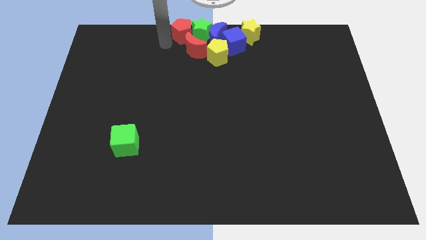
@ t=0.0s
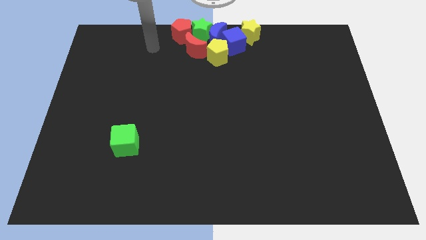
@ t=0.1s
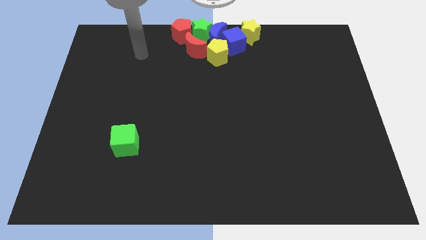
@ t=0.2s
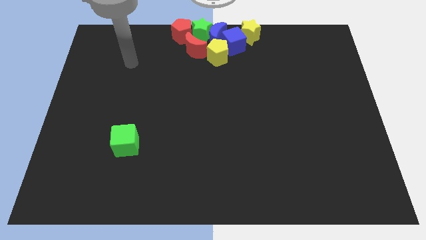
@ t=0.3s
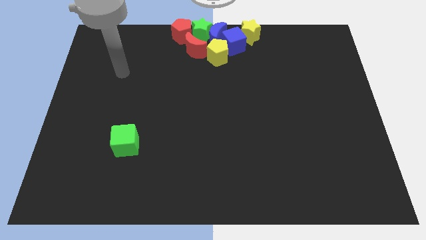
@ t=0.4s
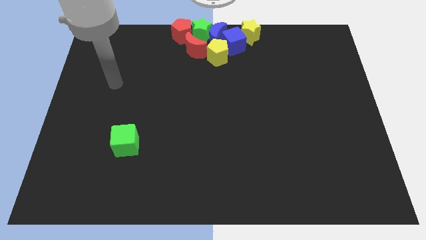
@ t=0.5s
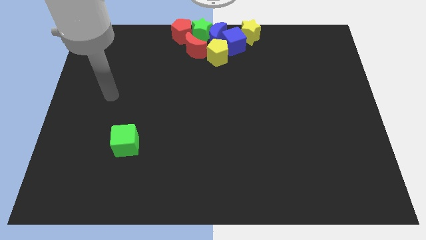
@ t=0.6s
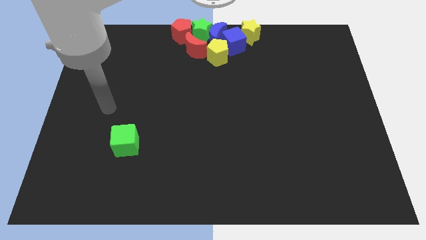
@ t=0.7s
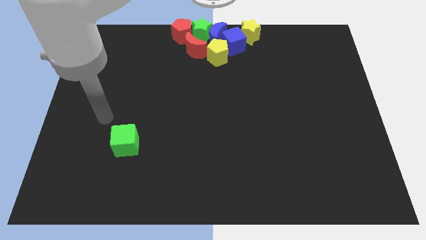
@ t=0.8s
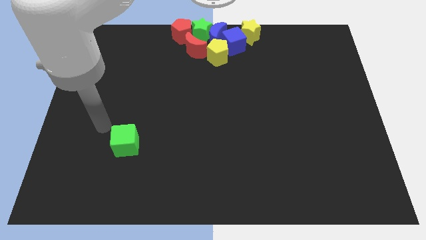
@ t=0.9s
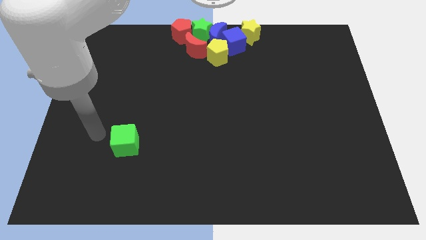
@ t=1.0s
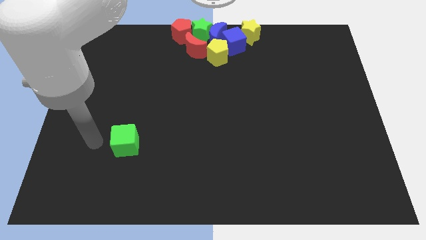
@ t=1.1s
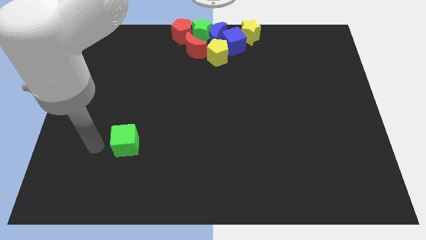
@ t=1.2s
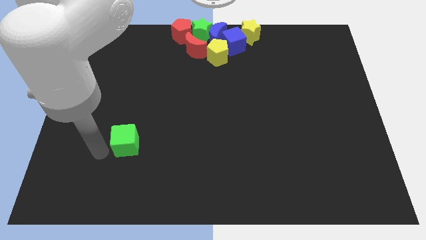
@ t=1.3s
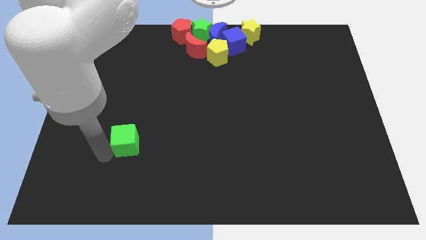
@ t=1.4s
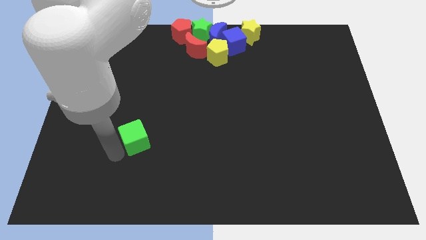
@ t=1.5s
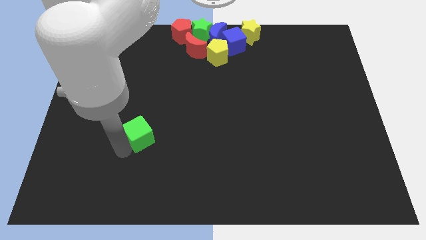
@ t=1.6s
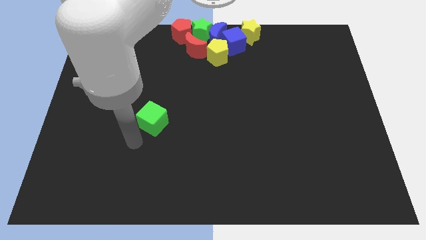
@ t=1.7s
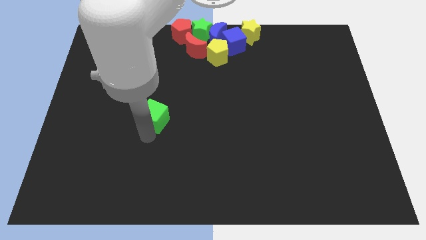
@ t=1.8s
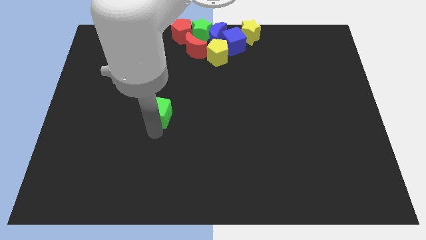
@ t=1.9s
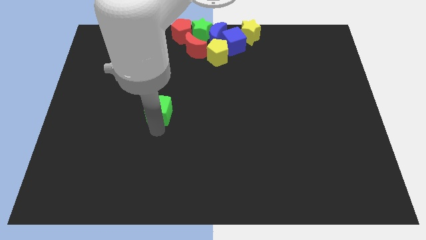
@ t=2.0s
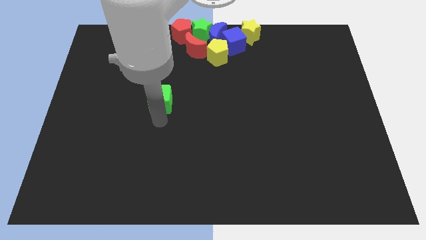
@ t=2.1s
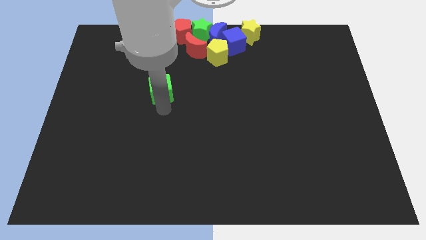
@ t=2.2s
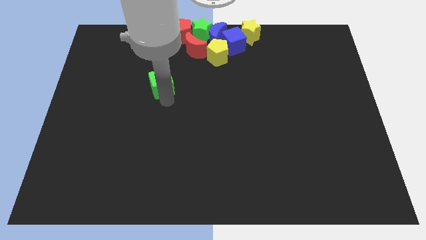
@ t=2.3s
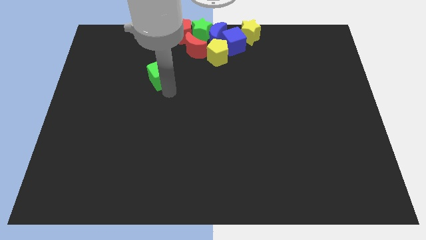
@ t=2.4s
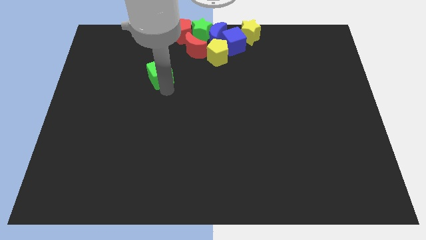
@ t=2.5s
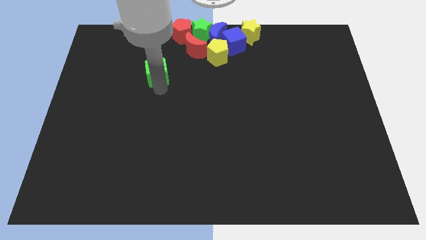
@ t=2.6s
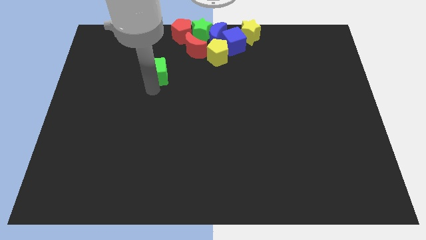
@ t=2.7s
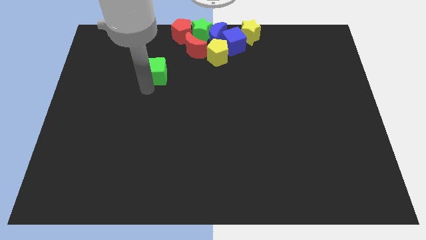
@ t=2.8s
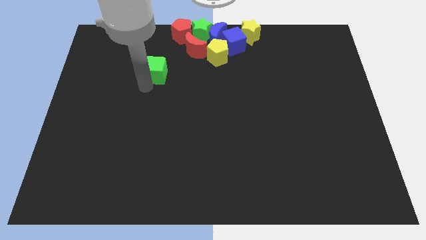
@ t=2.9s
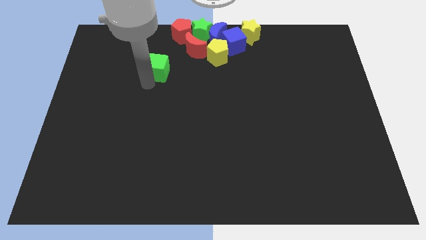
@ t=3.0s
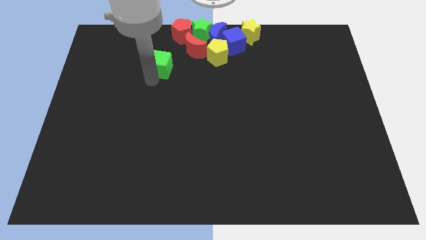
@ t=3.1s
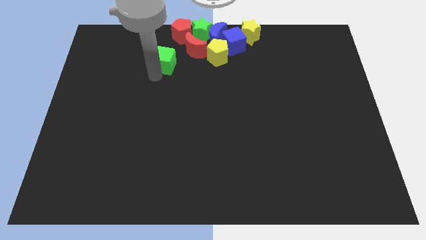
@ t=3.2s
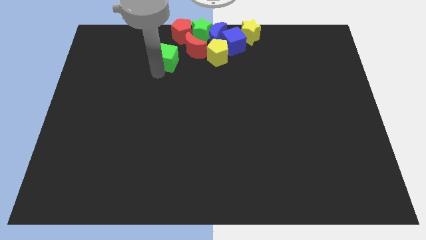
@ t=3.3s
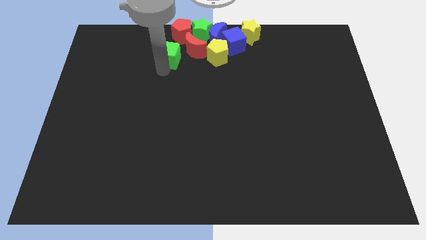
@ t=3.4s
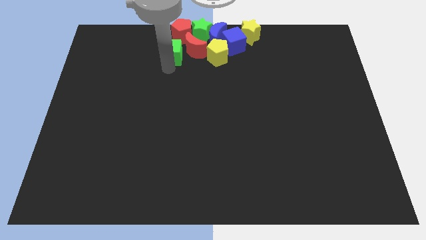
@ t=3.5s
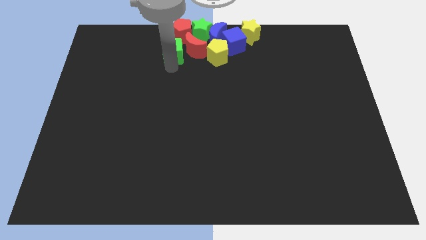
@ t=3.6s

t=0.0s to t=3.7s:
move the green cube to the left of the red crescent

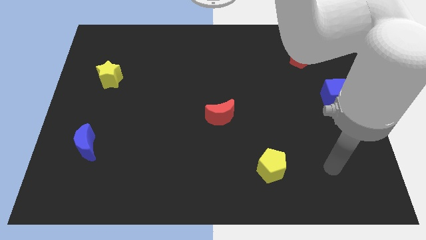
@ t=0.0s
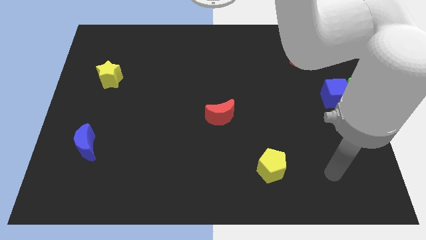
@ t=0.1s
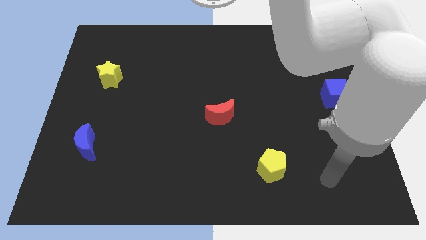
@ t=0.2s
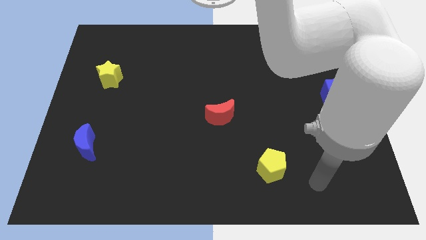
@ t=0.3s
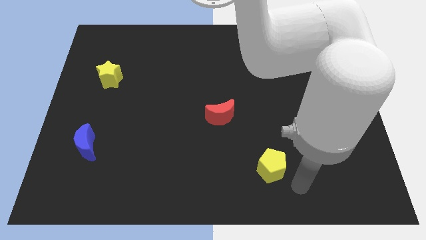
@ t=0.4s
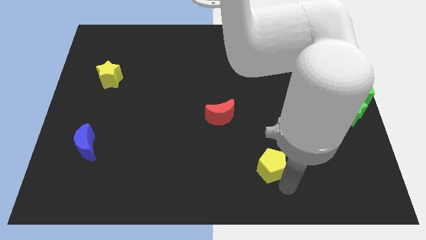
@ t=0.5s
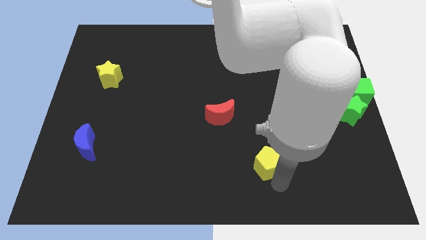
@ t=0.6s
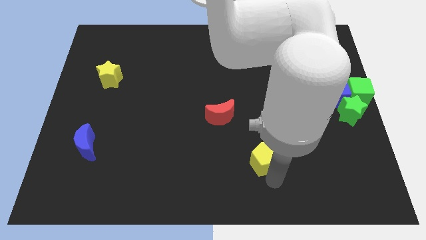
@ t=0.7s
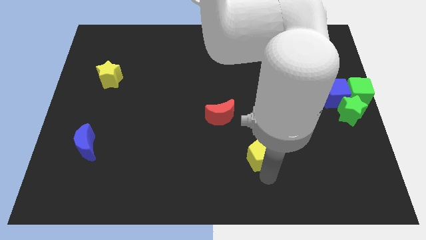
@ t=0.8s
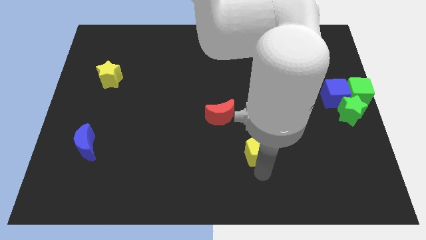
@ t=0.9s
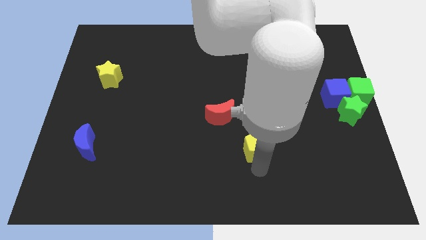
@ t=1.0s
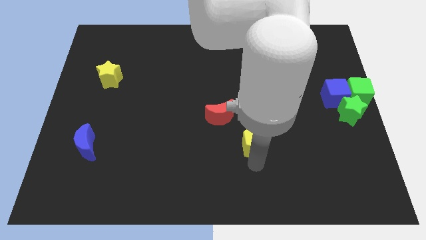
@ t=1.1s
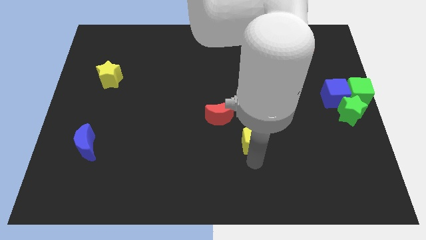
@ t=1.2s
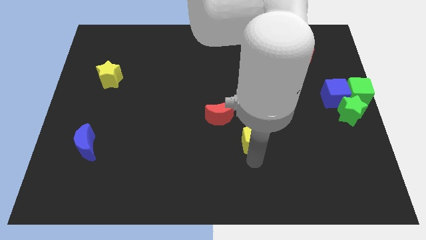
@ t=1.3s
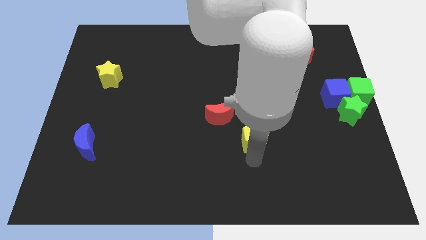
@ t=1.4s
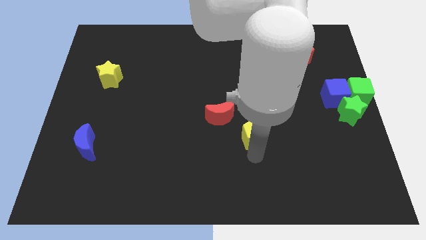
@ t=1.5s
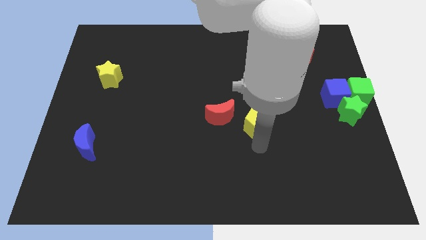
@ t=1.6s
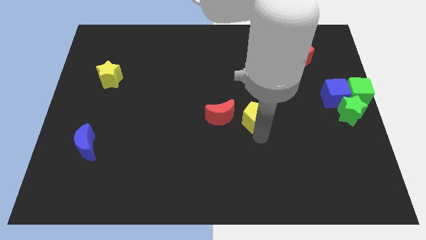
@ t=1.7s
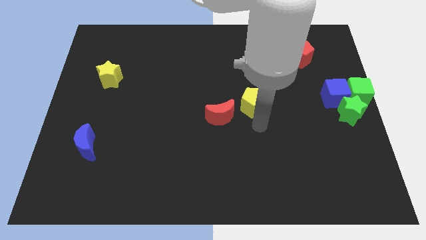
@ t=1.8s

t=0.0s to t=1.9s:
put the yellow pentagon right to the red moon

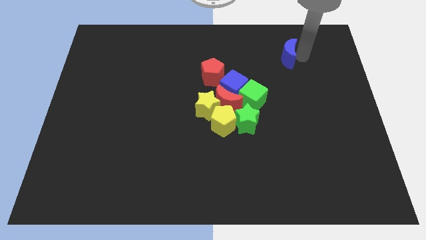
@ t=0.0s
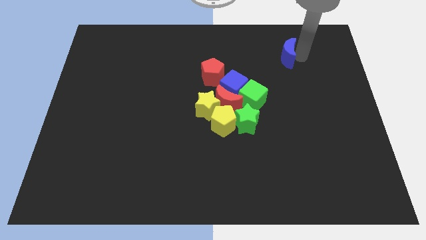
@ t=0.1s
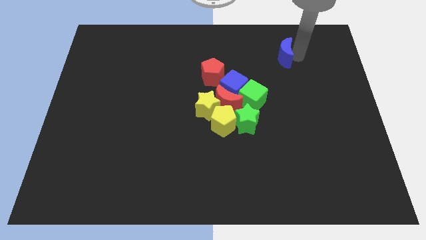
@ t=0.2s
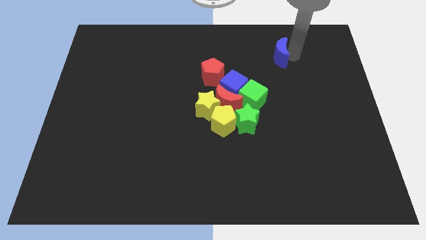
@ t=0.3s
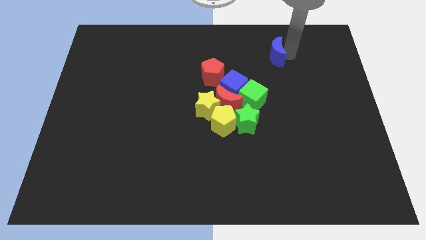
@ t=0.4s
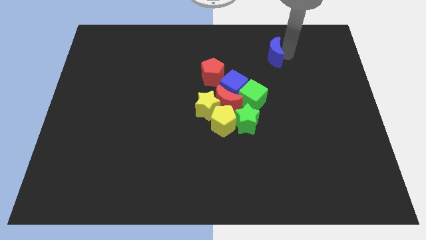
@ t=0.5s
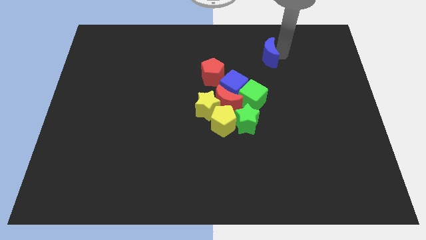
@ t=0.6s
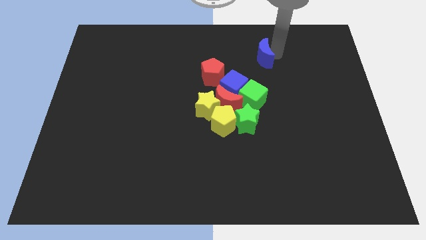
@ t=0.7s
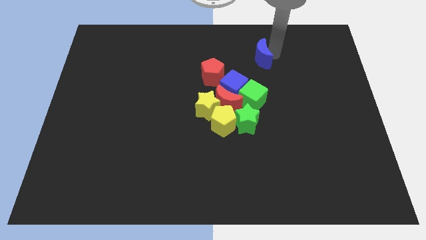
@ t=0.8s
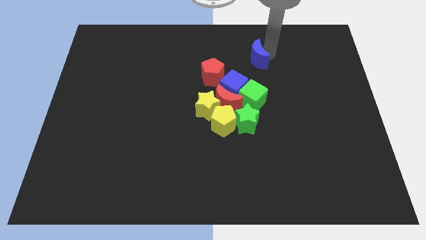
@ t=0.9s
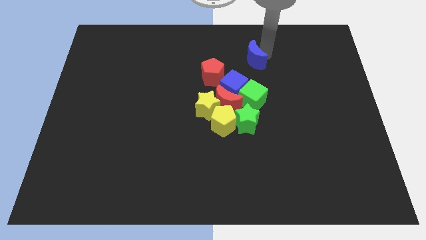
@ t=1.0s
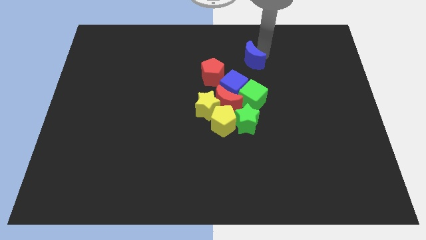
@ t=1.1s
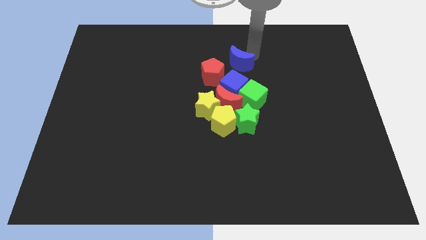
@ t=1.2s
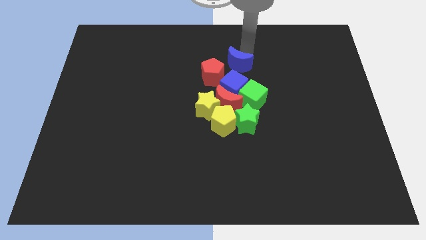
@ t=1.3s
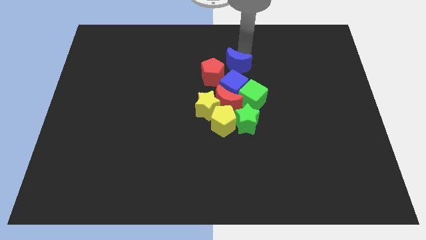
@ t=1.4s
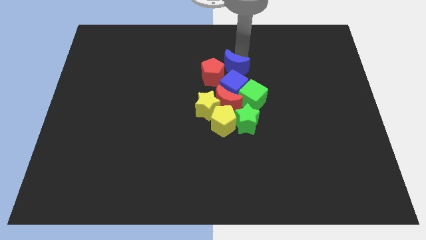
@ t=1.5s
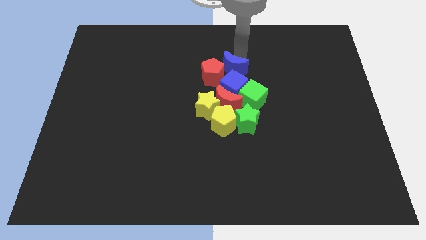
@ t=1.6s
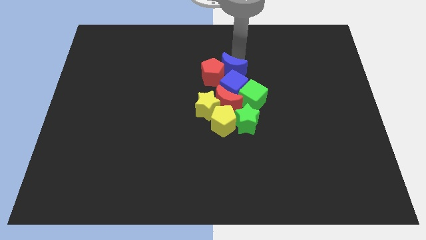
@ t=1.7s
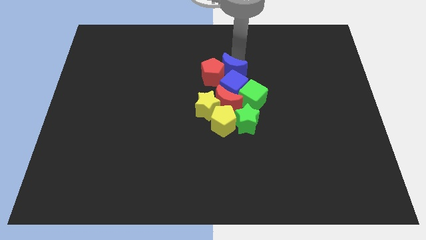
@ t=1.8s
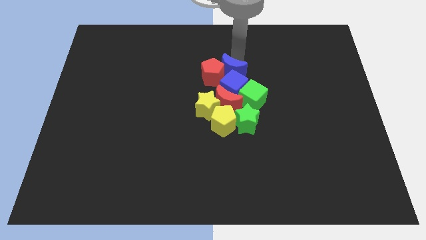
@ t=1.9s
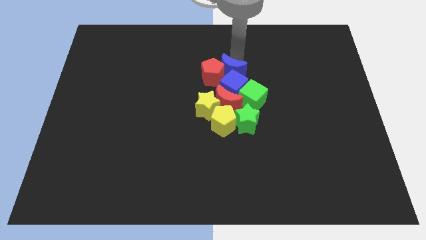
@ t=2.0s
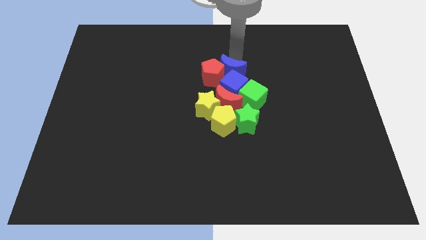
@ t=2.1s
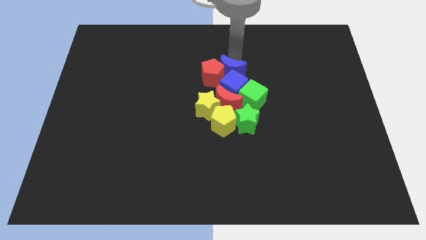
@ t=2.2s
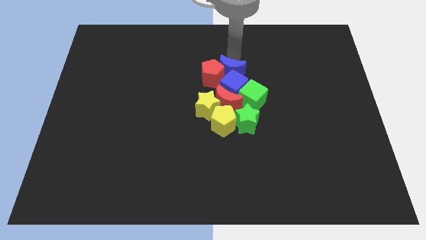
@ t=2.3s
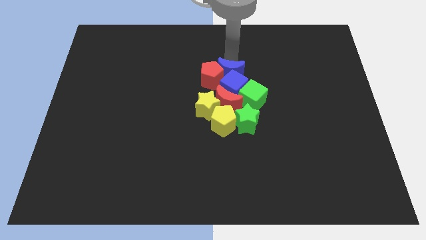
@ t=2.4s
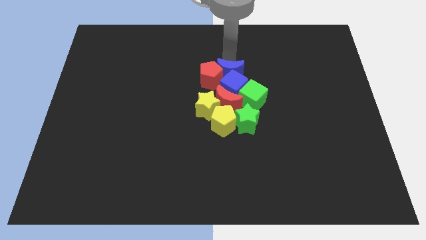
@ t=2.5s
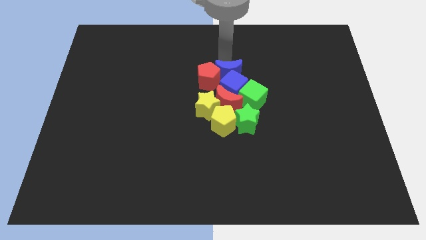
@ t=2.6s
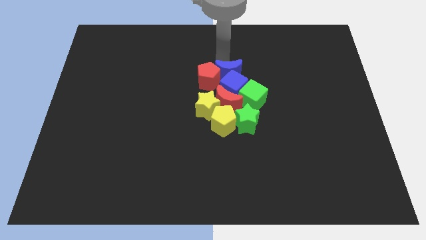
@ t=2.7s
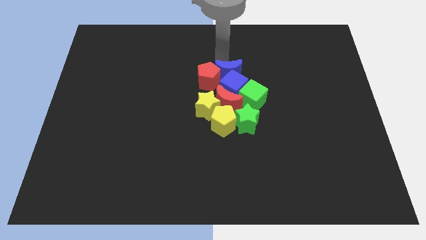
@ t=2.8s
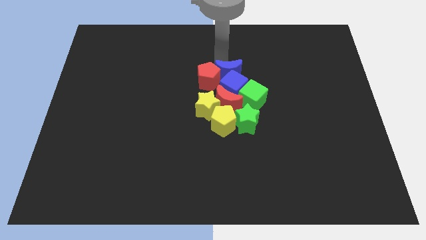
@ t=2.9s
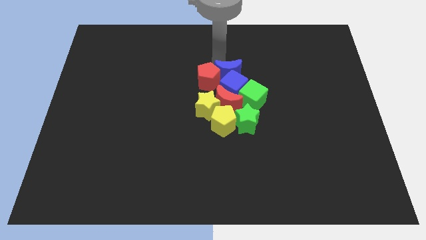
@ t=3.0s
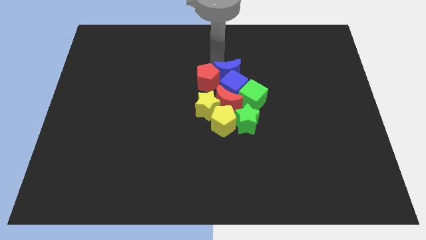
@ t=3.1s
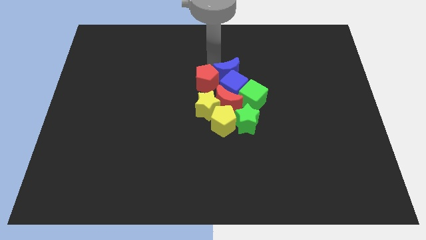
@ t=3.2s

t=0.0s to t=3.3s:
push the blue crescent to the top of the blue cube
